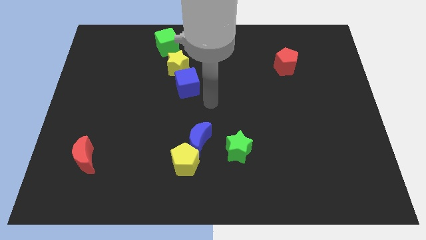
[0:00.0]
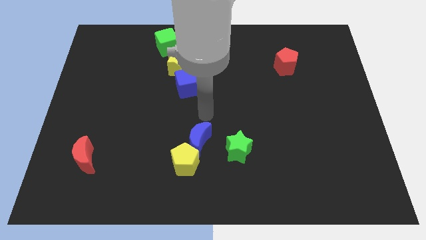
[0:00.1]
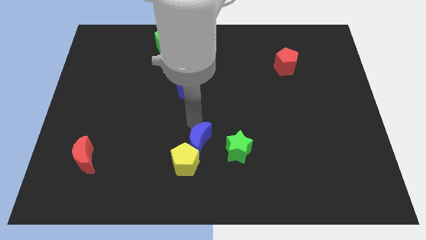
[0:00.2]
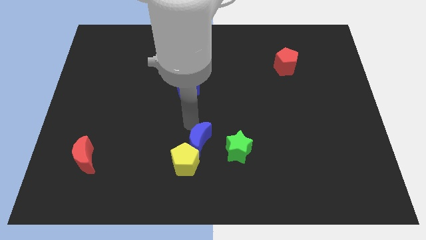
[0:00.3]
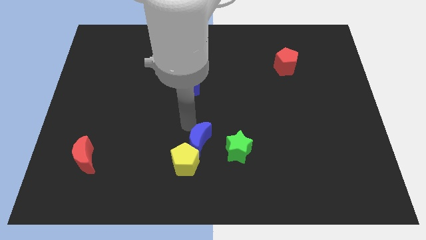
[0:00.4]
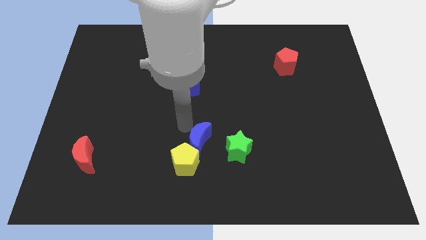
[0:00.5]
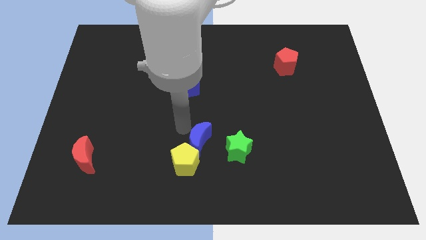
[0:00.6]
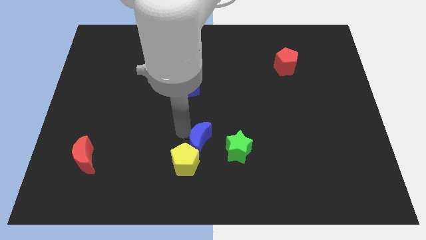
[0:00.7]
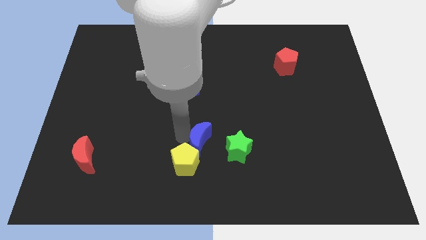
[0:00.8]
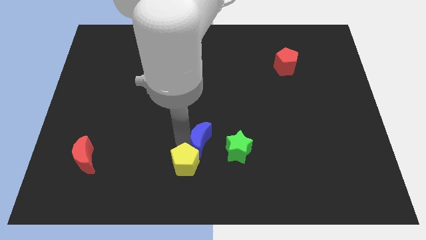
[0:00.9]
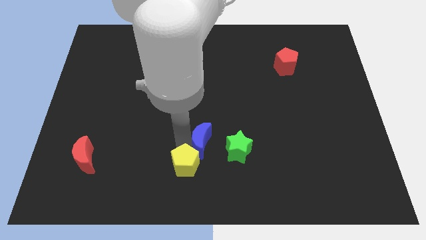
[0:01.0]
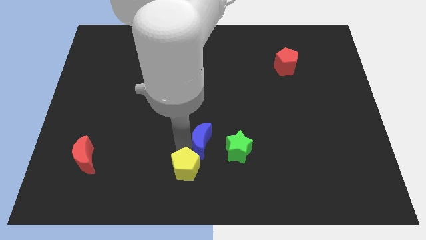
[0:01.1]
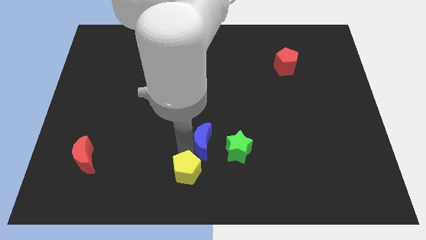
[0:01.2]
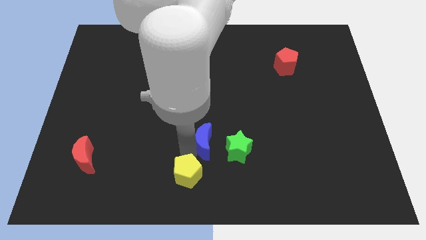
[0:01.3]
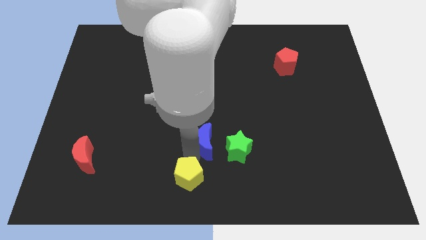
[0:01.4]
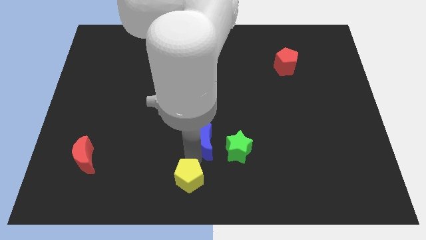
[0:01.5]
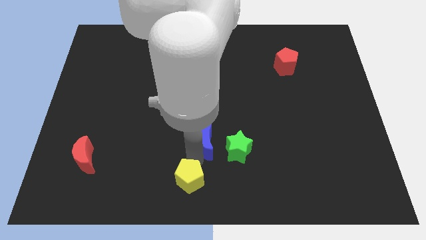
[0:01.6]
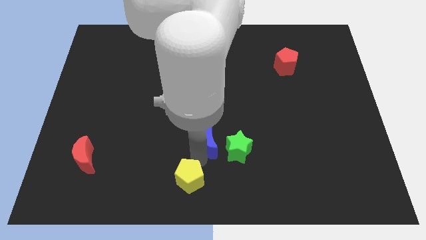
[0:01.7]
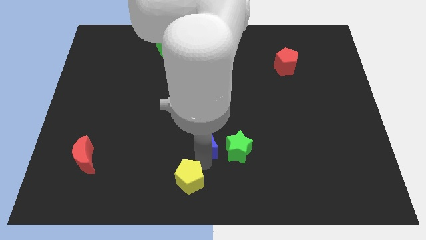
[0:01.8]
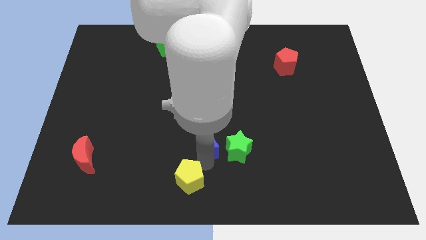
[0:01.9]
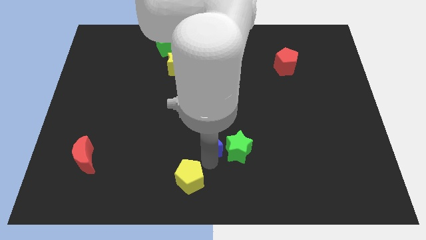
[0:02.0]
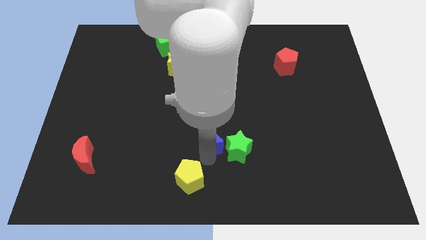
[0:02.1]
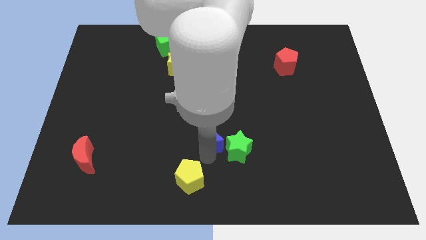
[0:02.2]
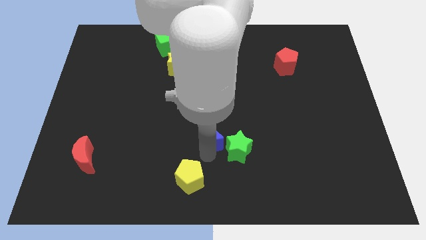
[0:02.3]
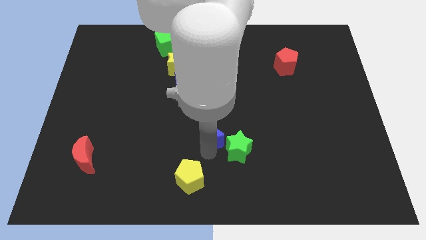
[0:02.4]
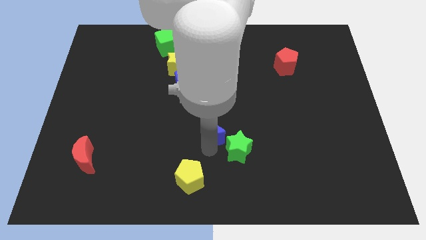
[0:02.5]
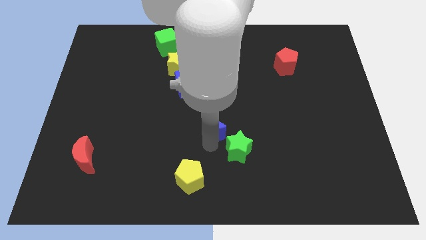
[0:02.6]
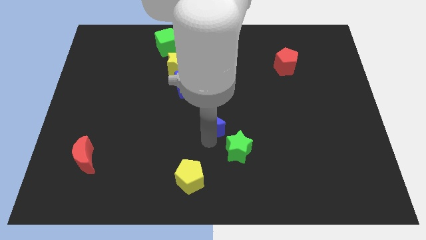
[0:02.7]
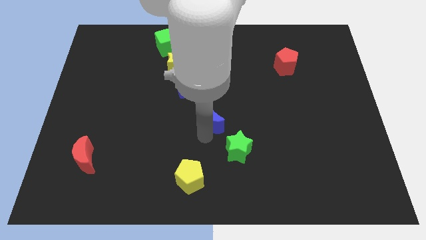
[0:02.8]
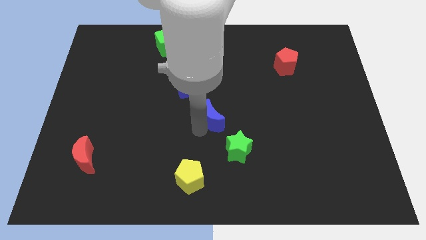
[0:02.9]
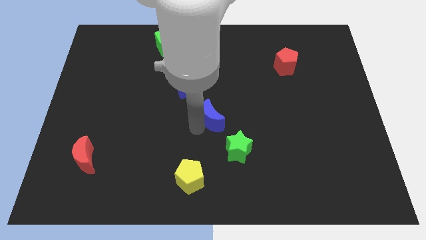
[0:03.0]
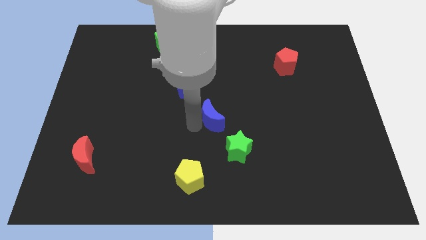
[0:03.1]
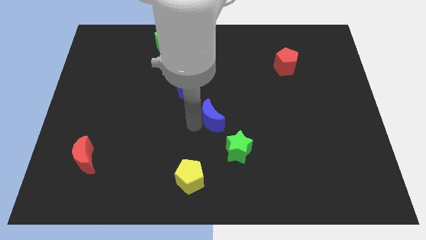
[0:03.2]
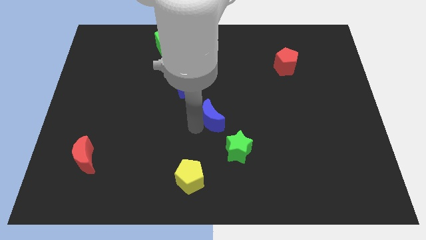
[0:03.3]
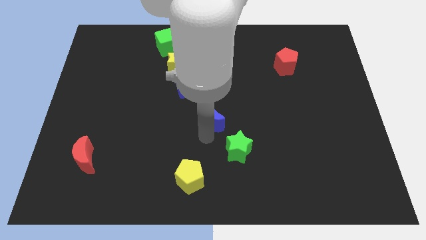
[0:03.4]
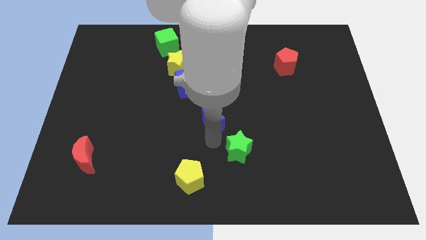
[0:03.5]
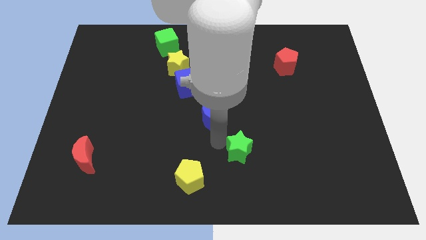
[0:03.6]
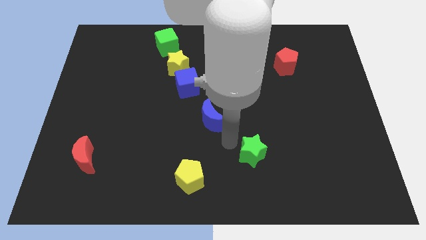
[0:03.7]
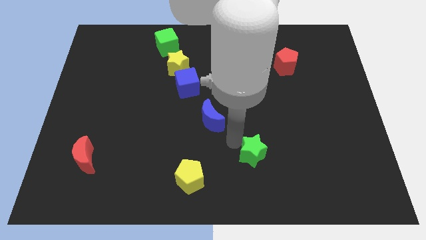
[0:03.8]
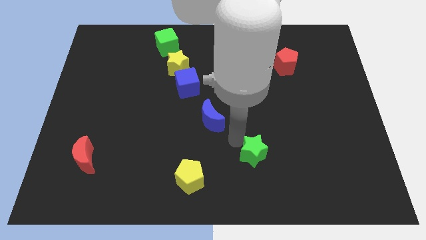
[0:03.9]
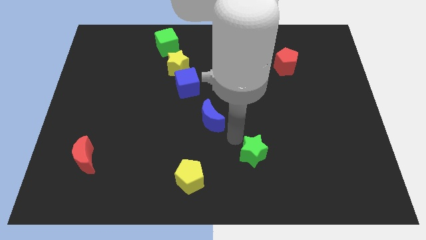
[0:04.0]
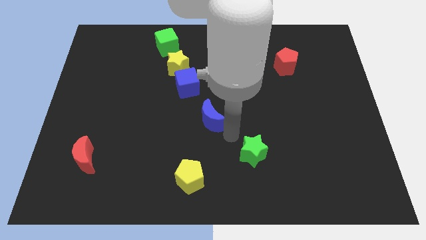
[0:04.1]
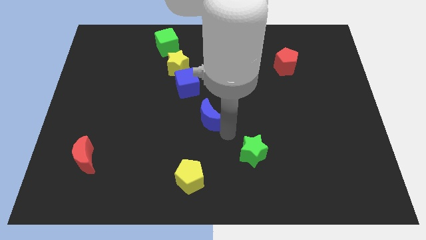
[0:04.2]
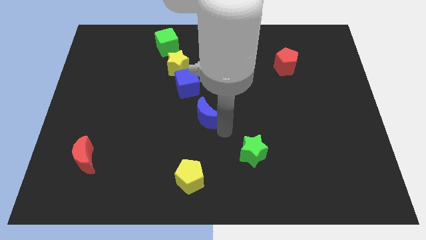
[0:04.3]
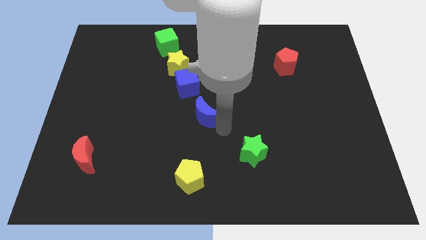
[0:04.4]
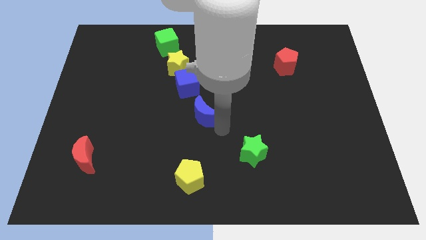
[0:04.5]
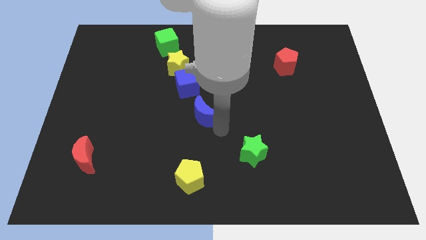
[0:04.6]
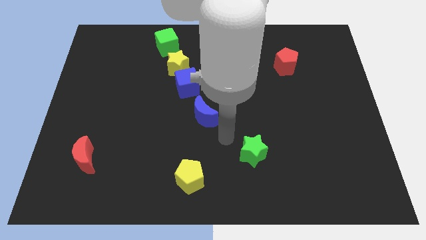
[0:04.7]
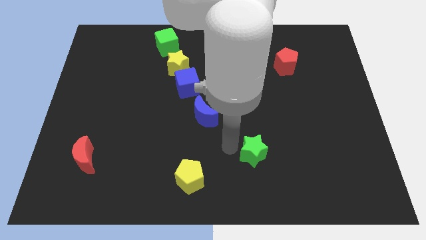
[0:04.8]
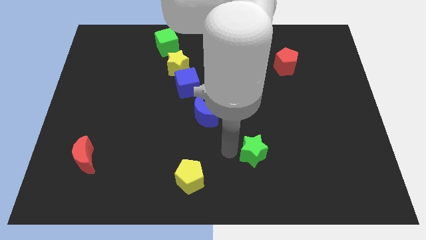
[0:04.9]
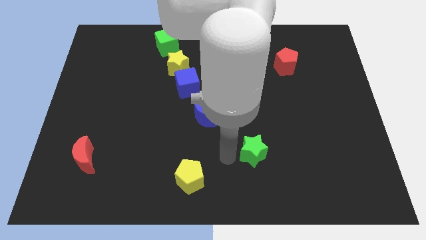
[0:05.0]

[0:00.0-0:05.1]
slide the blue crescent to the bottom right side of the blue cube

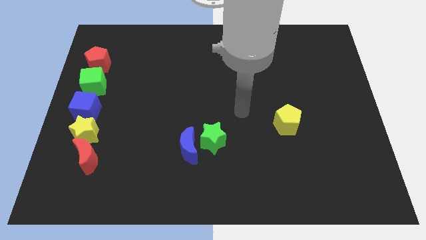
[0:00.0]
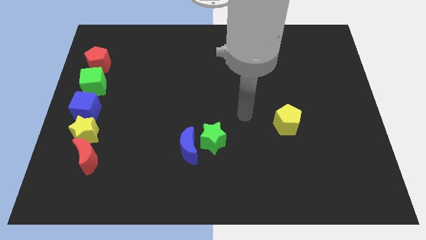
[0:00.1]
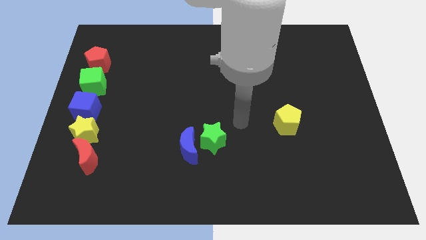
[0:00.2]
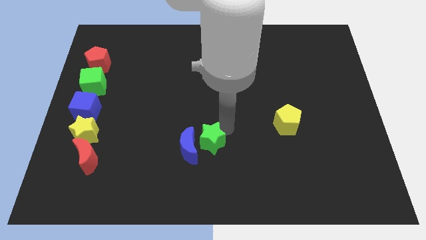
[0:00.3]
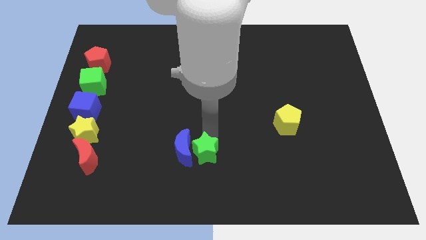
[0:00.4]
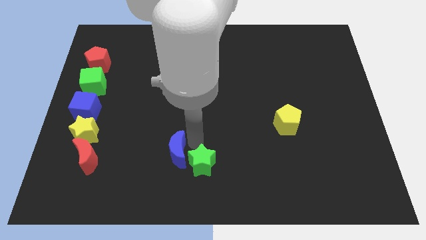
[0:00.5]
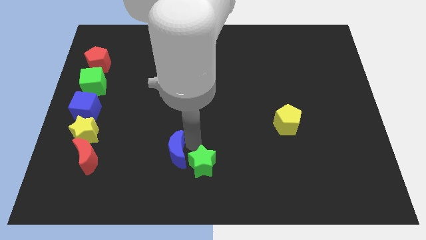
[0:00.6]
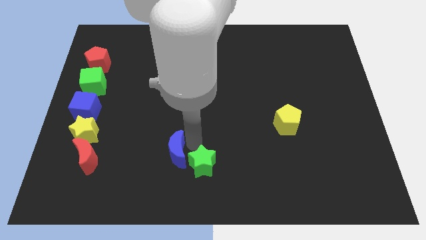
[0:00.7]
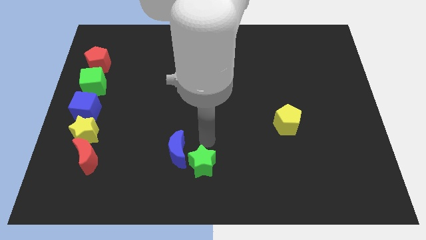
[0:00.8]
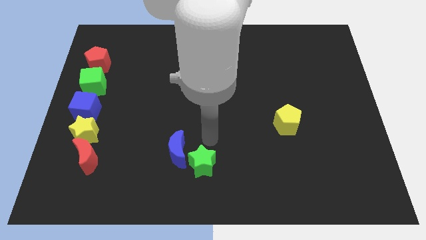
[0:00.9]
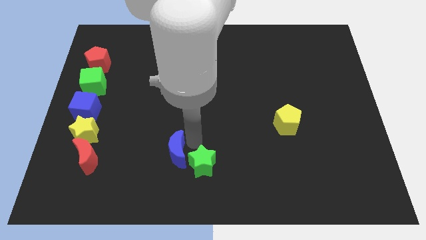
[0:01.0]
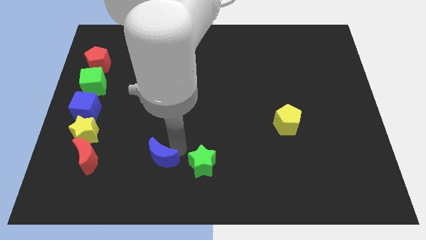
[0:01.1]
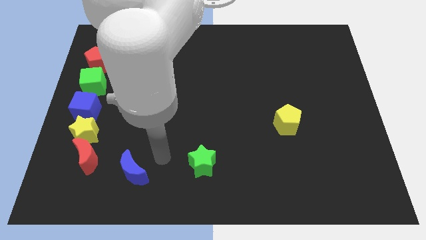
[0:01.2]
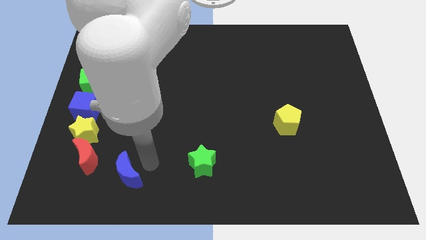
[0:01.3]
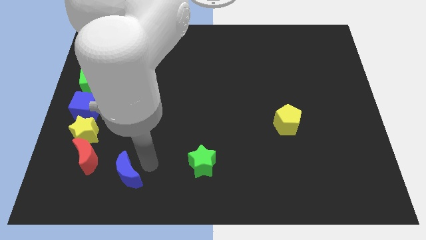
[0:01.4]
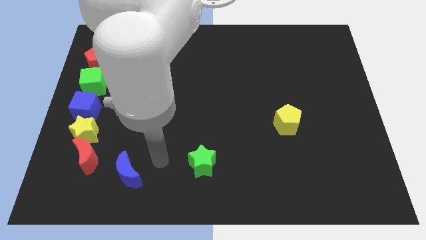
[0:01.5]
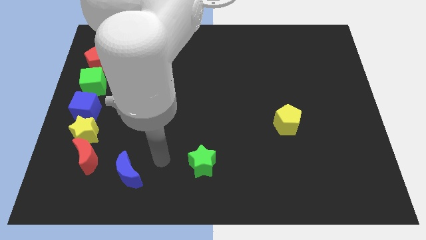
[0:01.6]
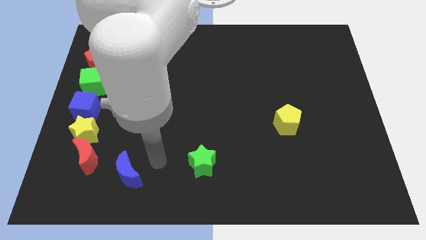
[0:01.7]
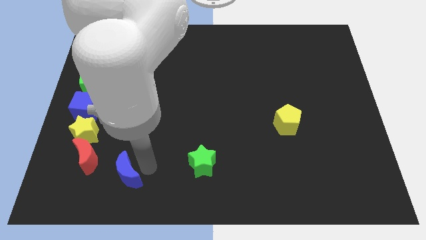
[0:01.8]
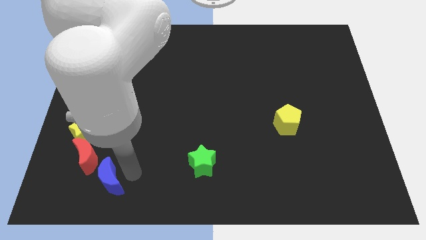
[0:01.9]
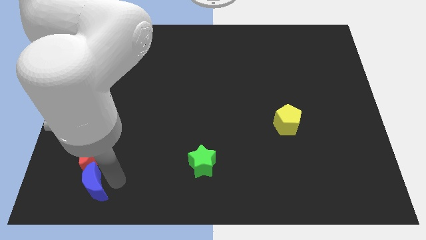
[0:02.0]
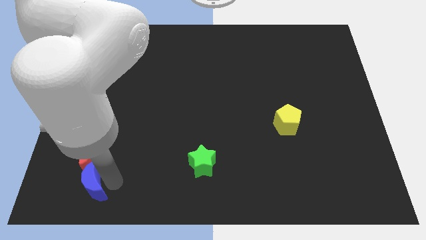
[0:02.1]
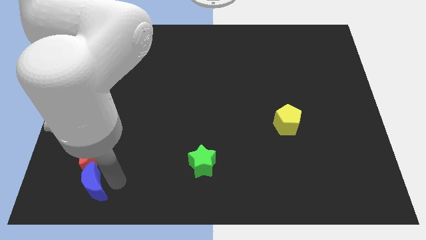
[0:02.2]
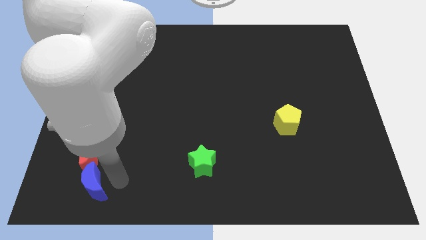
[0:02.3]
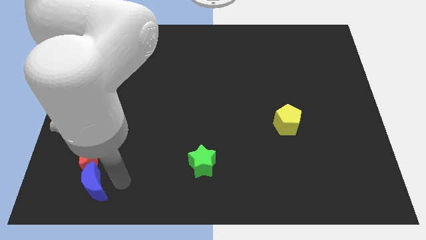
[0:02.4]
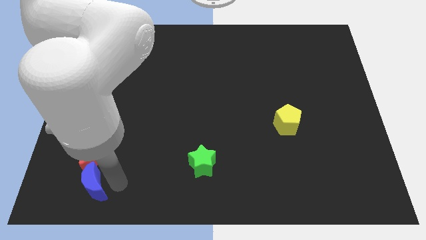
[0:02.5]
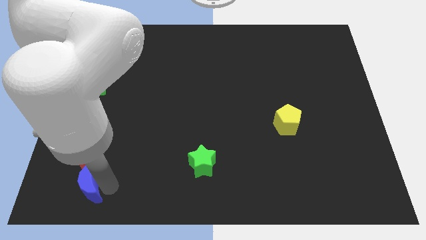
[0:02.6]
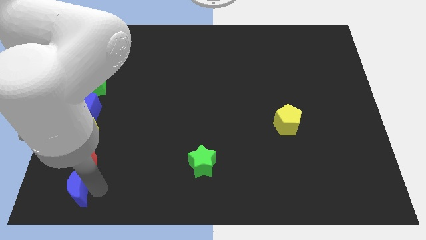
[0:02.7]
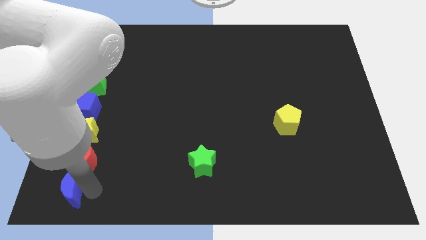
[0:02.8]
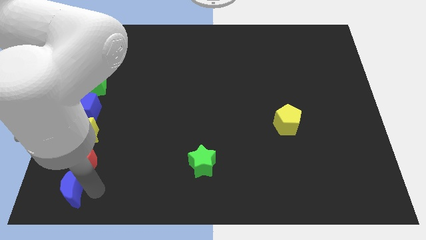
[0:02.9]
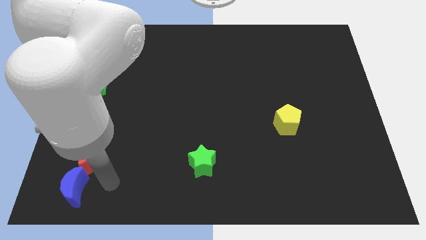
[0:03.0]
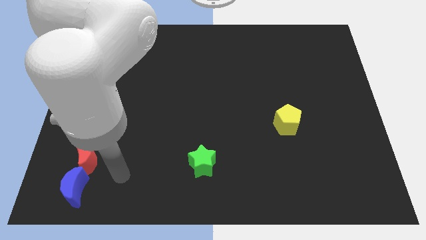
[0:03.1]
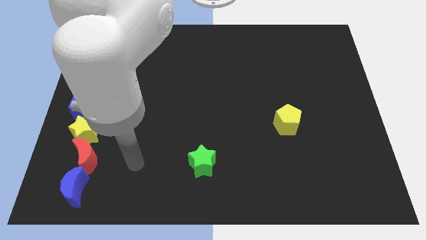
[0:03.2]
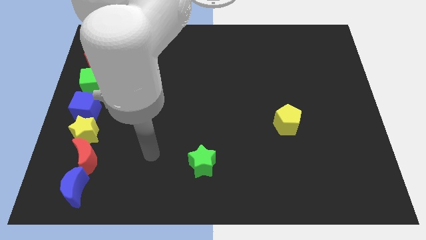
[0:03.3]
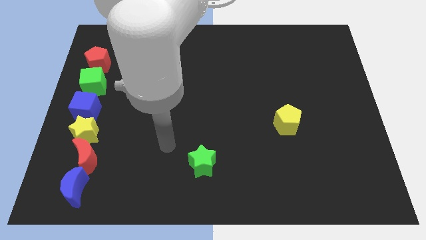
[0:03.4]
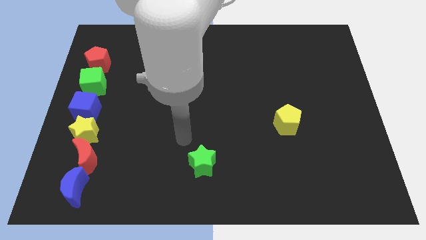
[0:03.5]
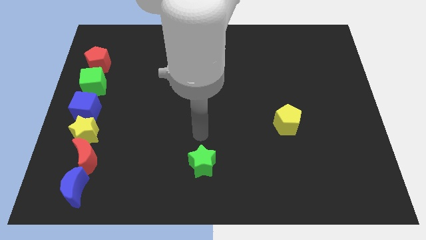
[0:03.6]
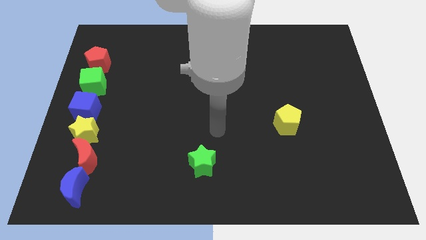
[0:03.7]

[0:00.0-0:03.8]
place the blue crescent below the red crescent

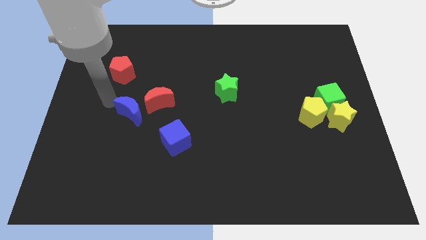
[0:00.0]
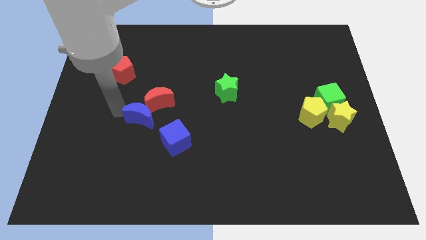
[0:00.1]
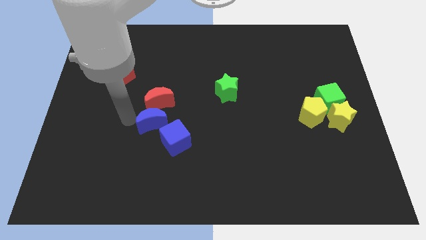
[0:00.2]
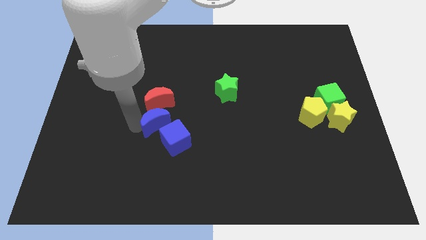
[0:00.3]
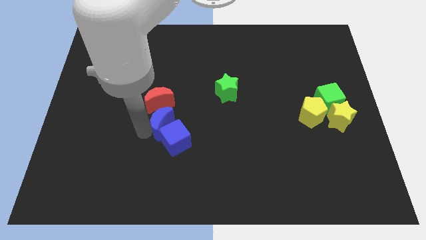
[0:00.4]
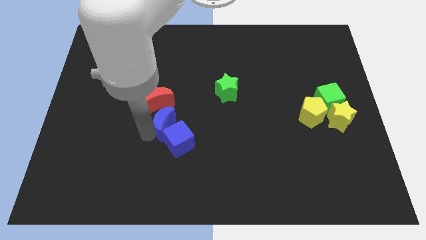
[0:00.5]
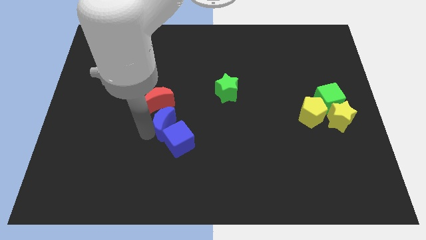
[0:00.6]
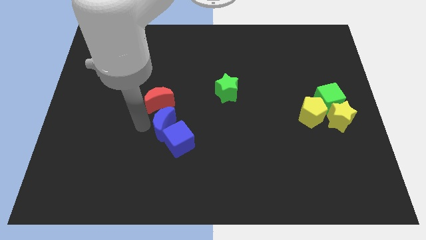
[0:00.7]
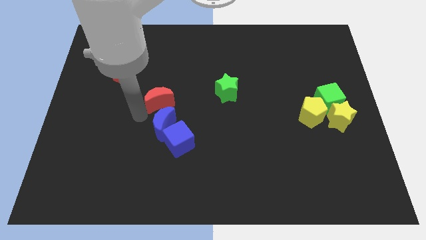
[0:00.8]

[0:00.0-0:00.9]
push the blue moon towards the blue cube
